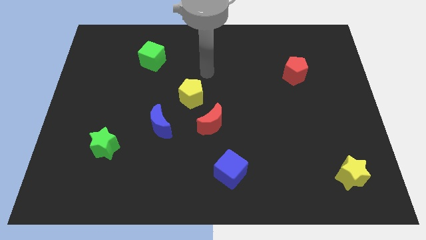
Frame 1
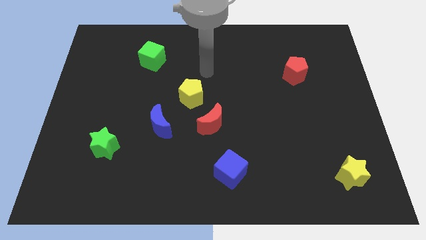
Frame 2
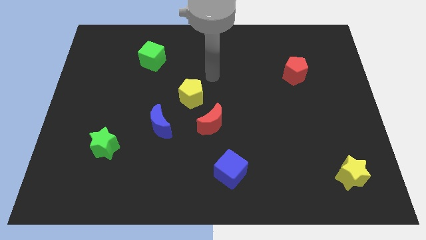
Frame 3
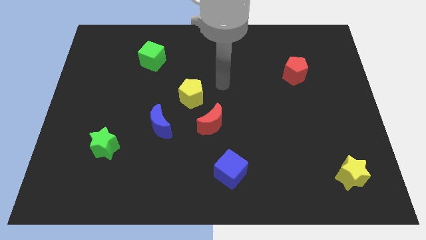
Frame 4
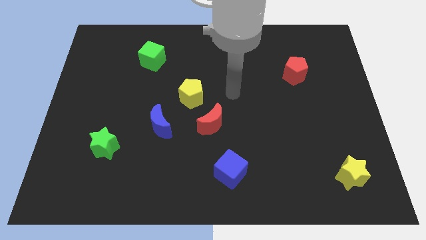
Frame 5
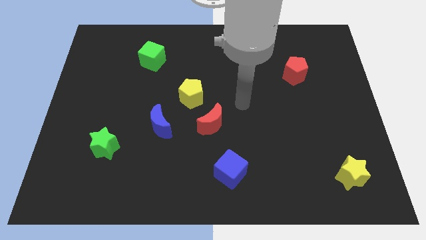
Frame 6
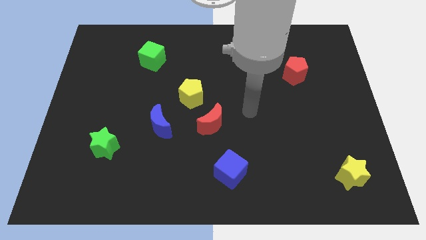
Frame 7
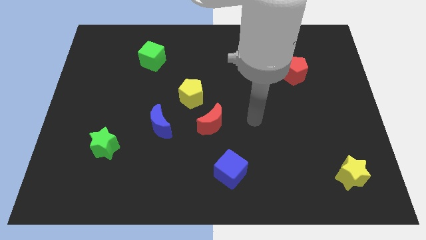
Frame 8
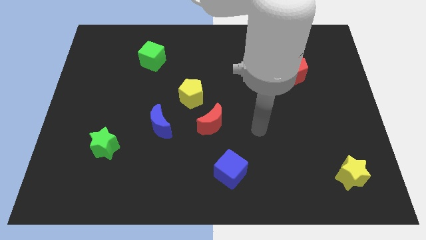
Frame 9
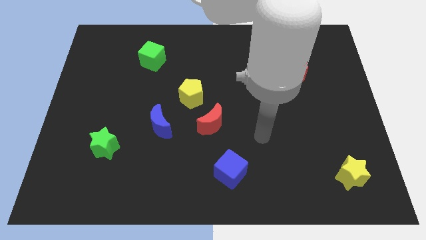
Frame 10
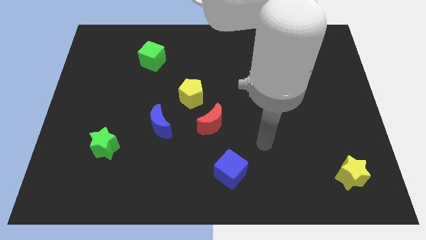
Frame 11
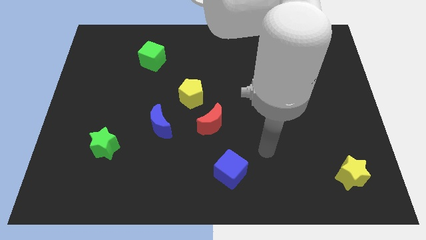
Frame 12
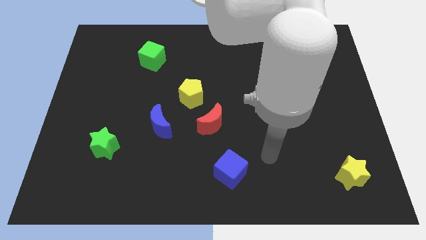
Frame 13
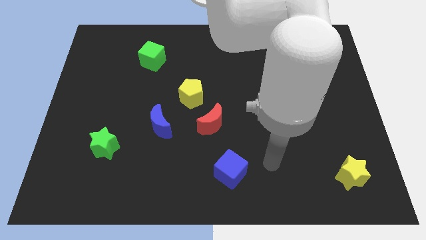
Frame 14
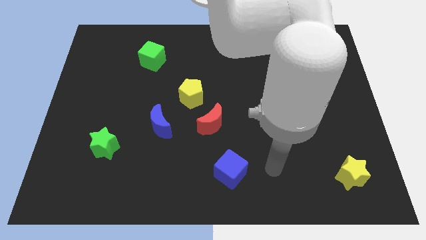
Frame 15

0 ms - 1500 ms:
move the arm to the right of the blue cube

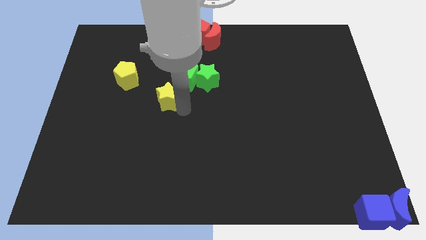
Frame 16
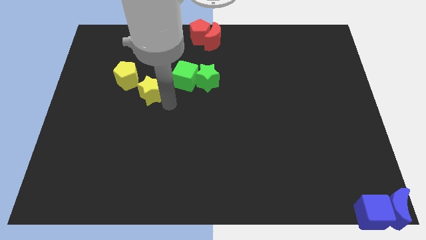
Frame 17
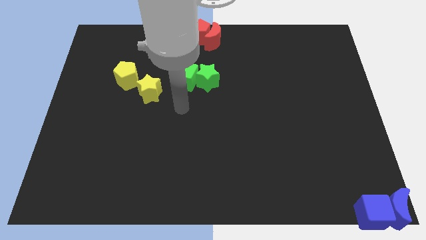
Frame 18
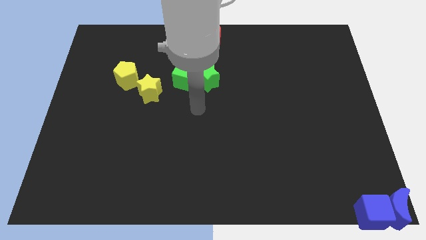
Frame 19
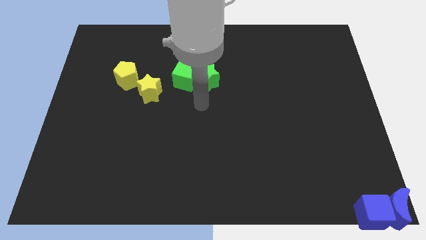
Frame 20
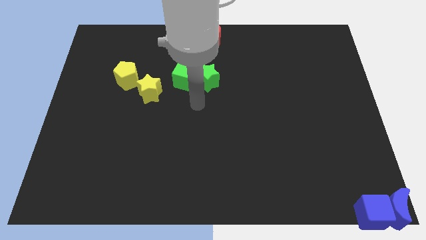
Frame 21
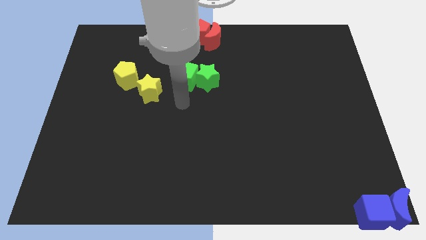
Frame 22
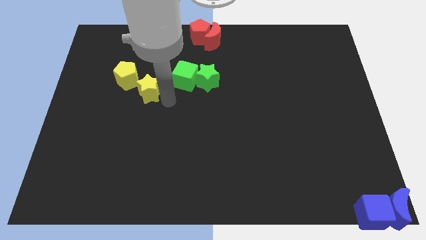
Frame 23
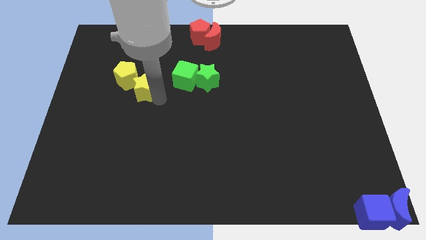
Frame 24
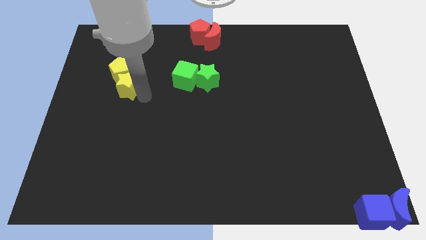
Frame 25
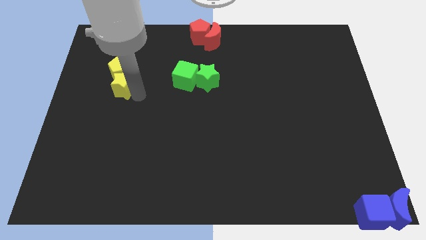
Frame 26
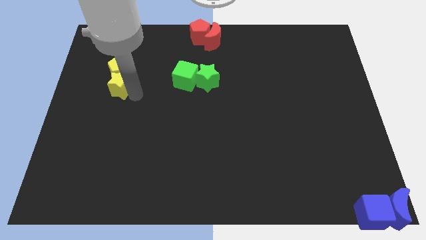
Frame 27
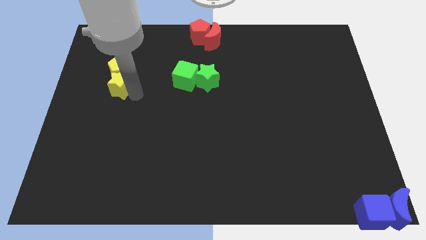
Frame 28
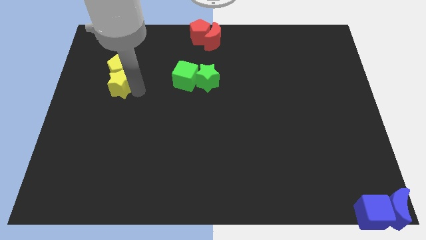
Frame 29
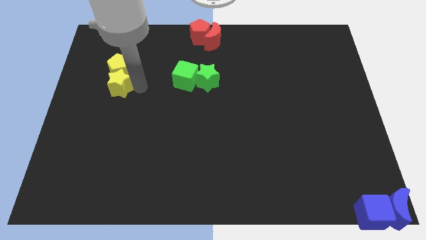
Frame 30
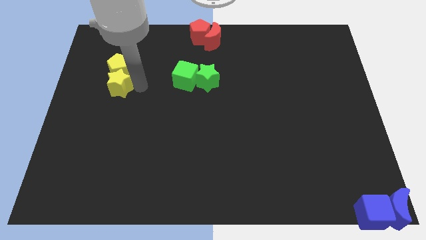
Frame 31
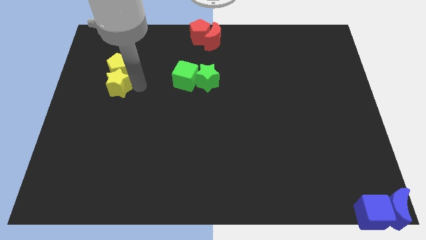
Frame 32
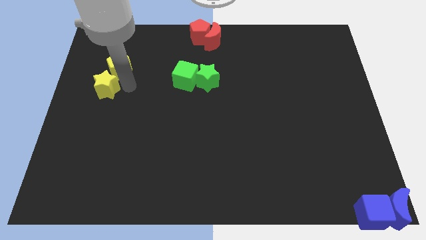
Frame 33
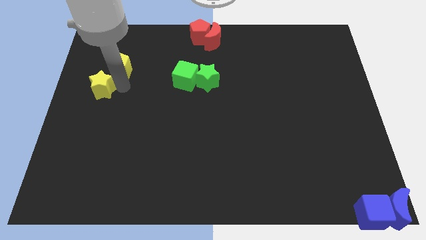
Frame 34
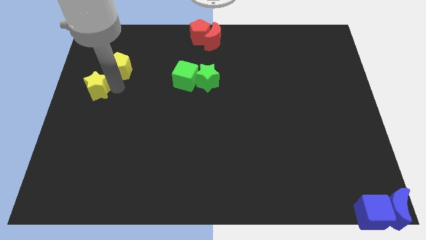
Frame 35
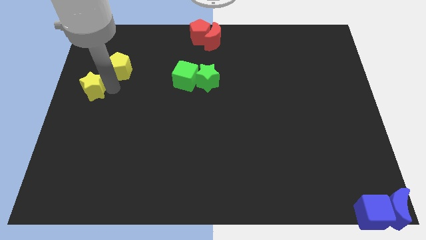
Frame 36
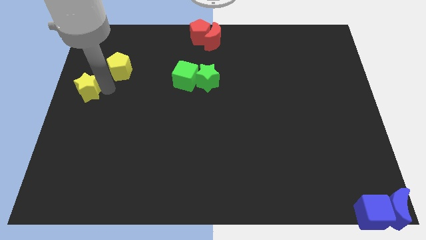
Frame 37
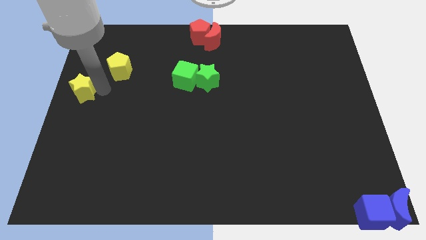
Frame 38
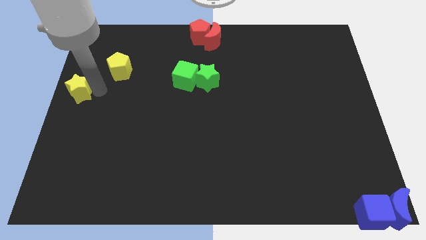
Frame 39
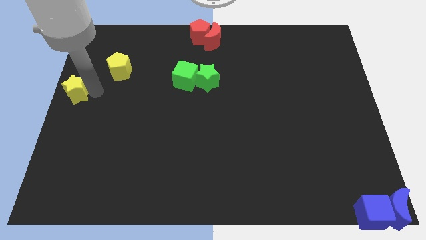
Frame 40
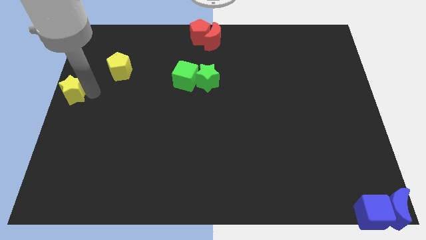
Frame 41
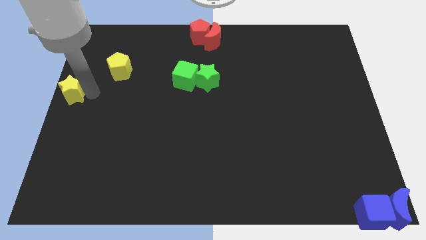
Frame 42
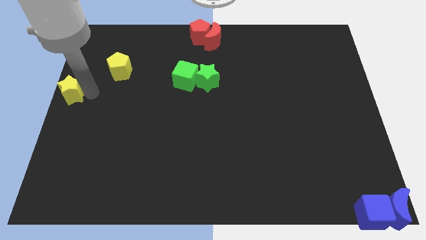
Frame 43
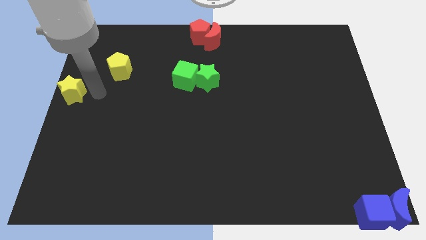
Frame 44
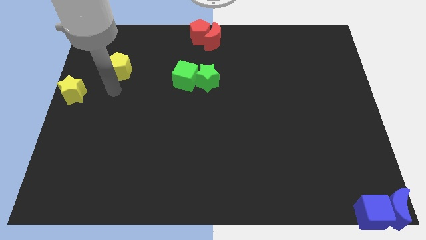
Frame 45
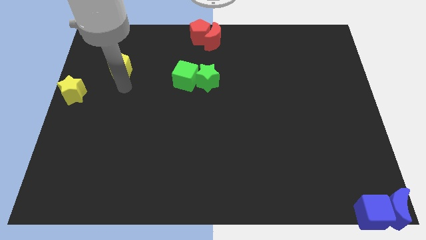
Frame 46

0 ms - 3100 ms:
move yellow star bottom left center of the board

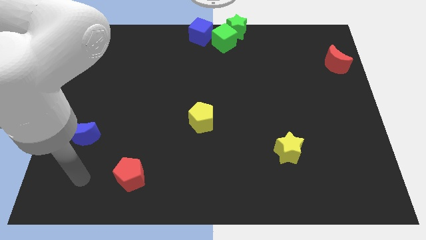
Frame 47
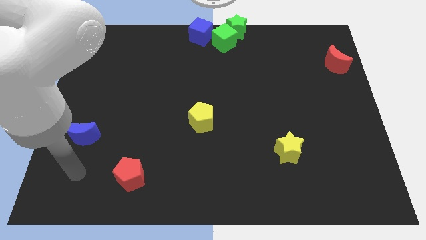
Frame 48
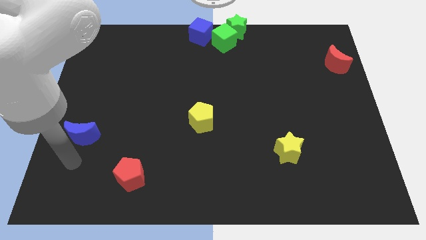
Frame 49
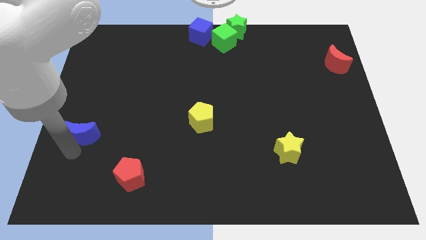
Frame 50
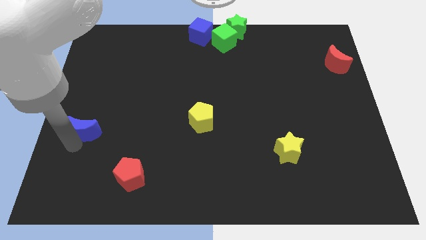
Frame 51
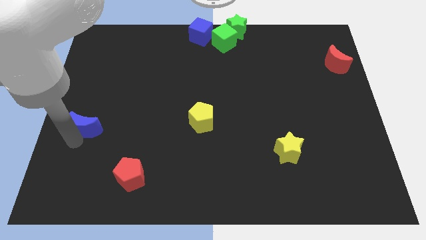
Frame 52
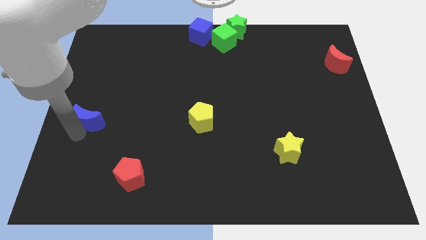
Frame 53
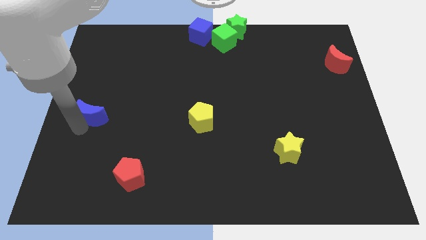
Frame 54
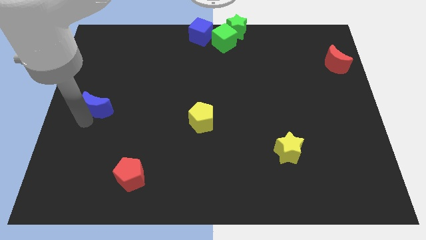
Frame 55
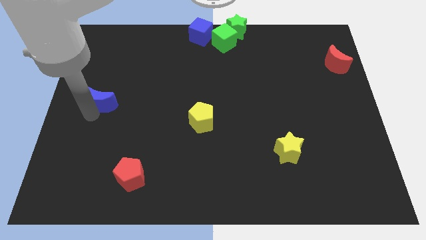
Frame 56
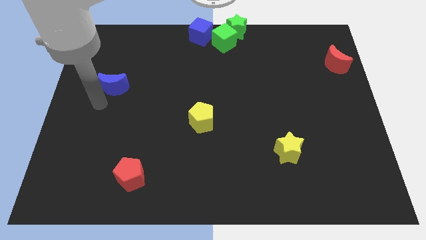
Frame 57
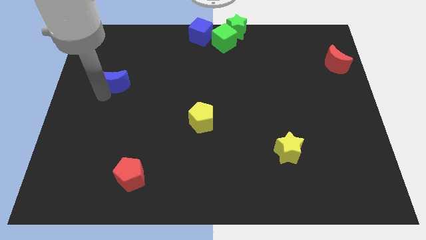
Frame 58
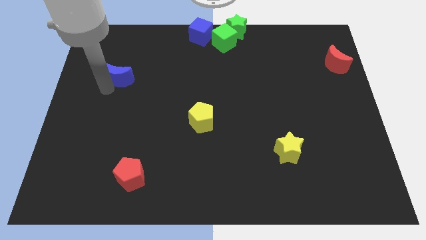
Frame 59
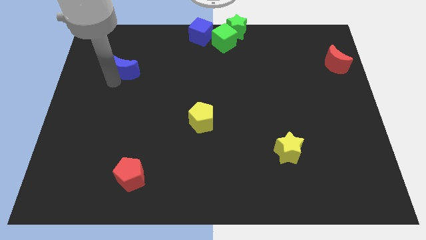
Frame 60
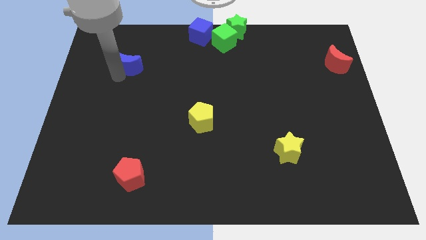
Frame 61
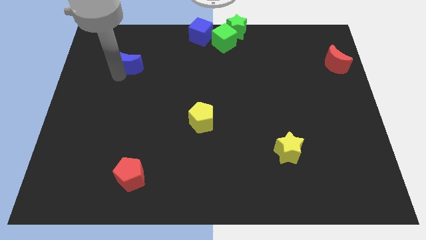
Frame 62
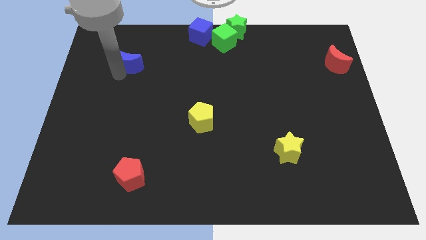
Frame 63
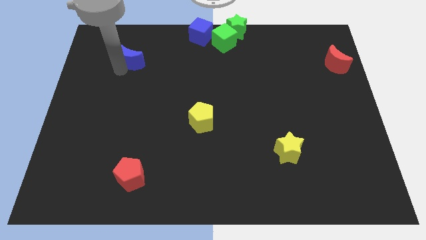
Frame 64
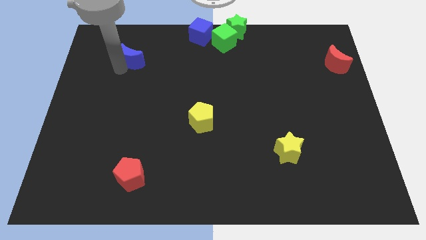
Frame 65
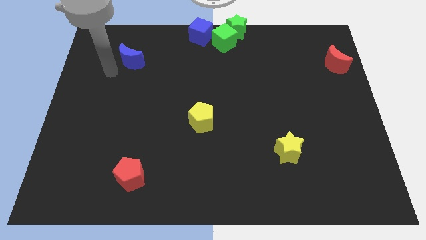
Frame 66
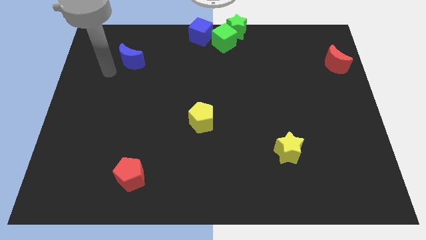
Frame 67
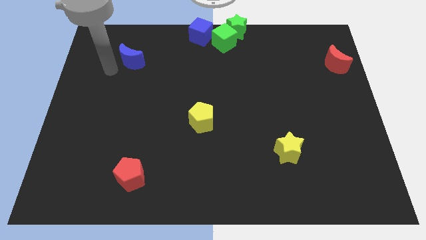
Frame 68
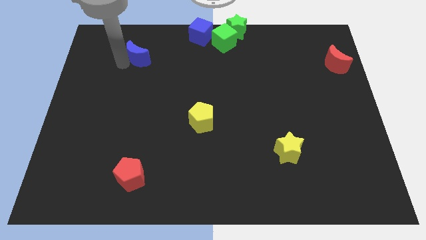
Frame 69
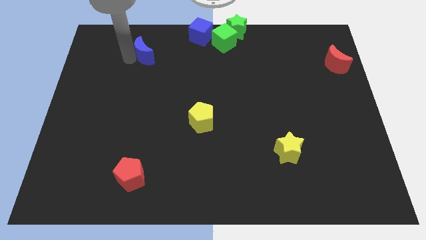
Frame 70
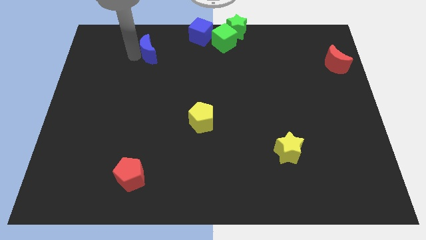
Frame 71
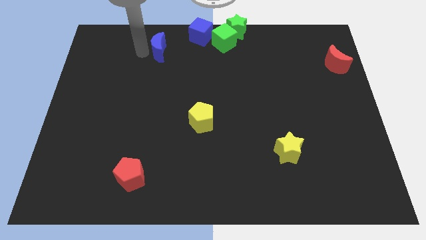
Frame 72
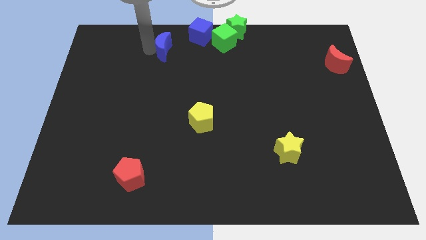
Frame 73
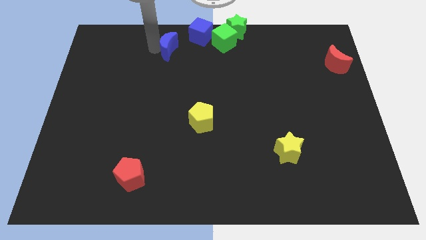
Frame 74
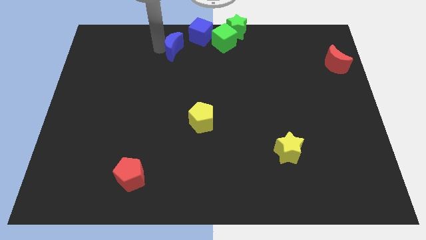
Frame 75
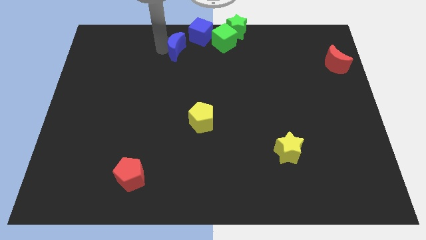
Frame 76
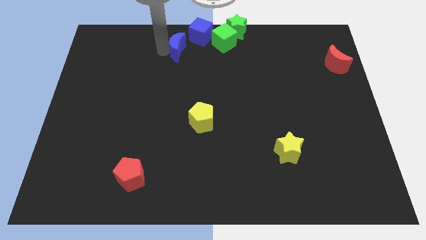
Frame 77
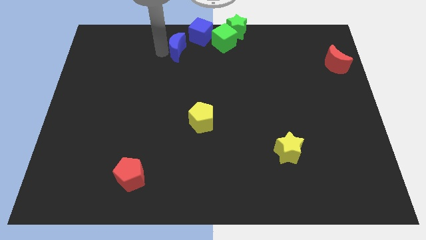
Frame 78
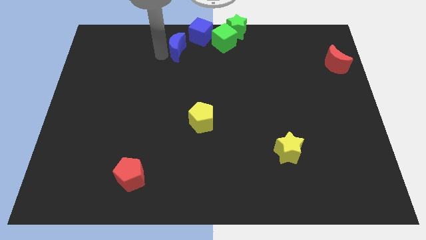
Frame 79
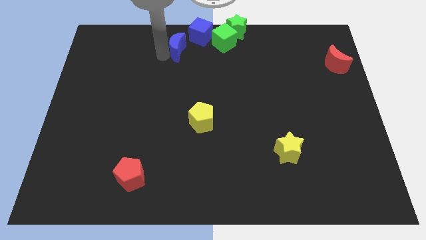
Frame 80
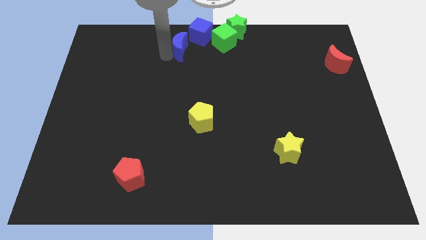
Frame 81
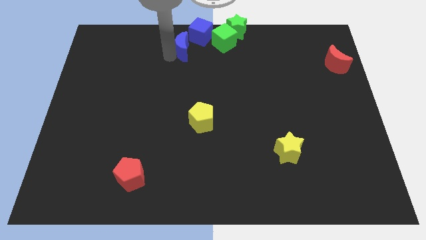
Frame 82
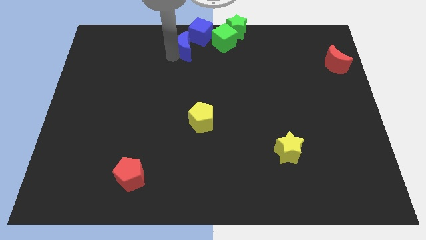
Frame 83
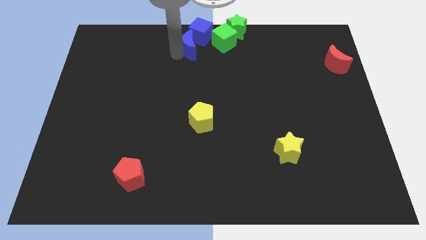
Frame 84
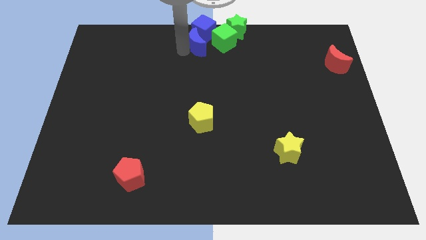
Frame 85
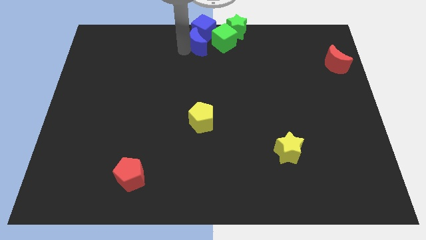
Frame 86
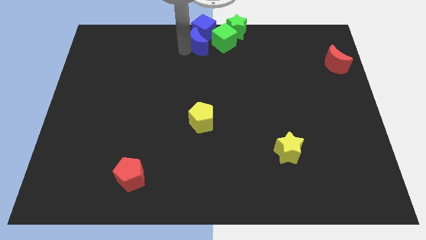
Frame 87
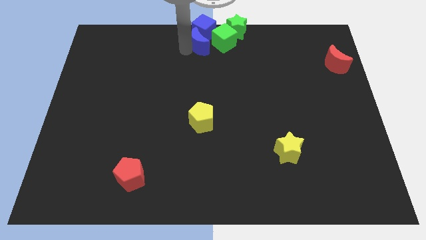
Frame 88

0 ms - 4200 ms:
push the blue crescent into the blue cube on the top center of the board
